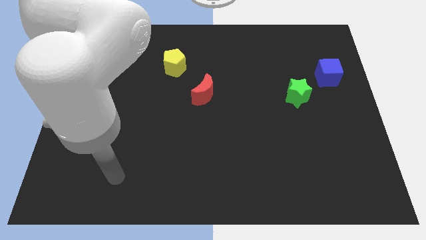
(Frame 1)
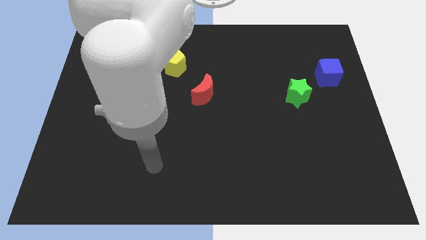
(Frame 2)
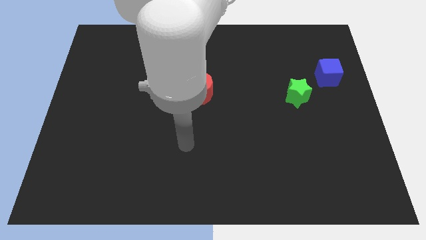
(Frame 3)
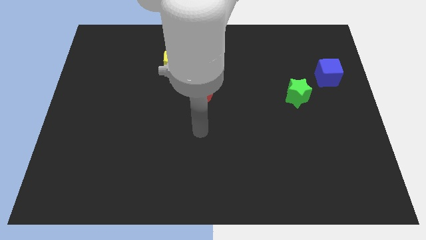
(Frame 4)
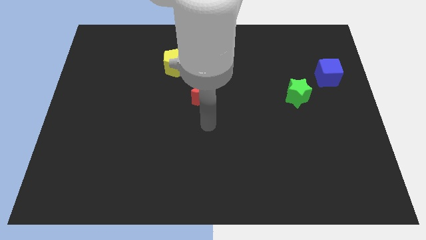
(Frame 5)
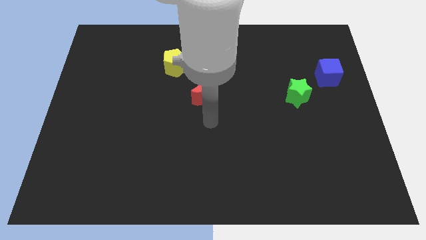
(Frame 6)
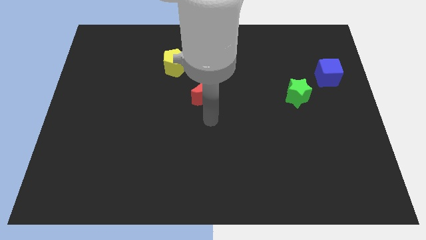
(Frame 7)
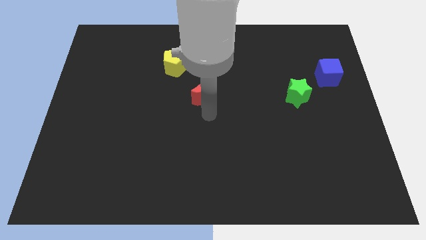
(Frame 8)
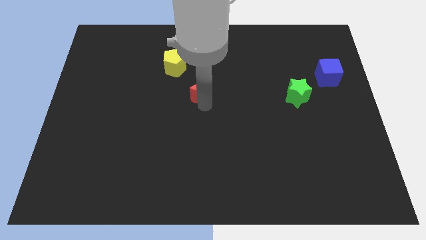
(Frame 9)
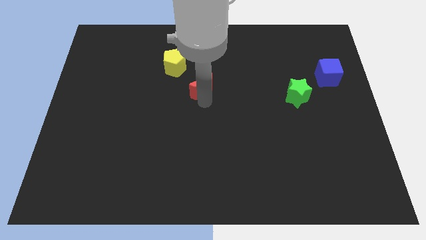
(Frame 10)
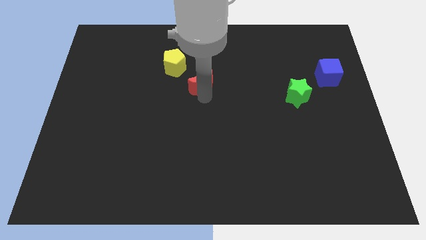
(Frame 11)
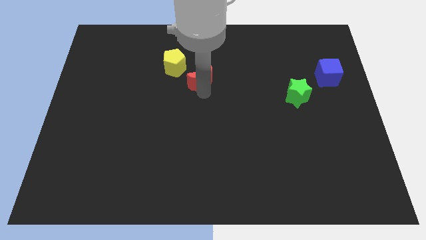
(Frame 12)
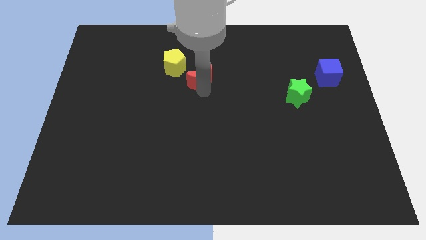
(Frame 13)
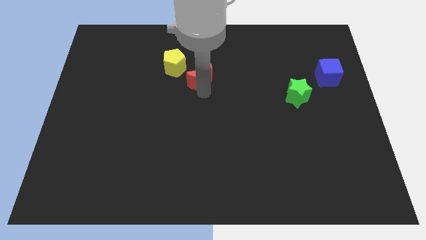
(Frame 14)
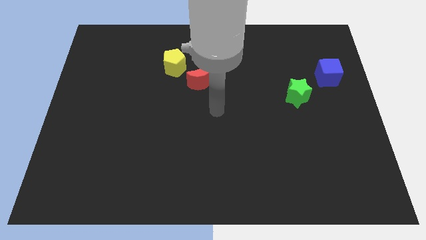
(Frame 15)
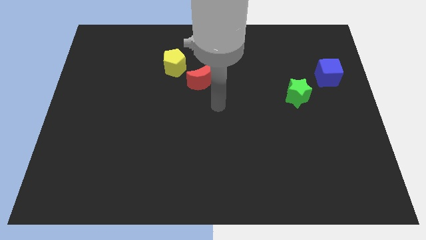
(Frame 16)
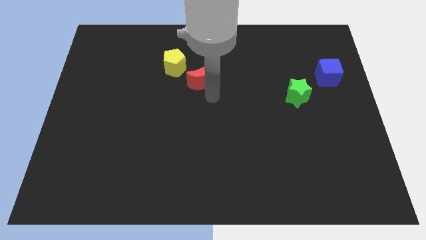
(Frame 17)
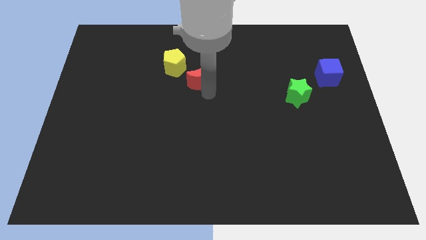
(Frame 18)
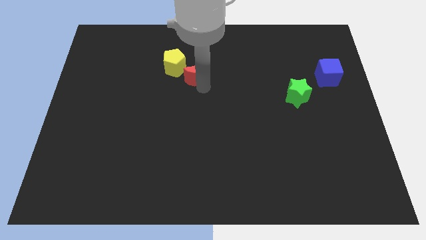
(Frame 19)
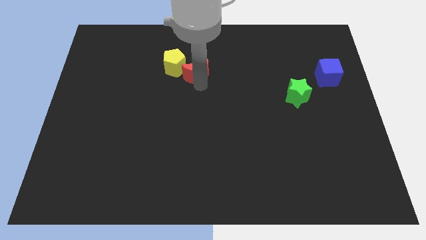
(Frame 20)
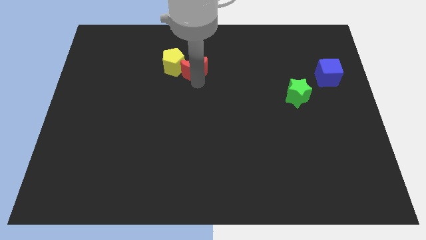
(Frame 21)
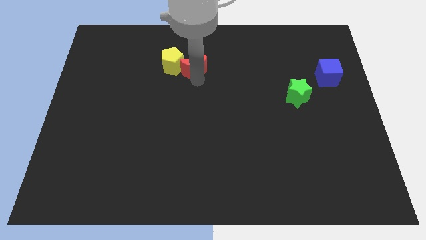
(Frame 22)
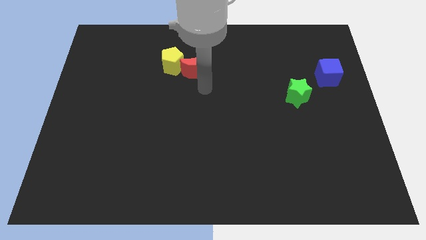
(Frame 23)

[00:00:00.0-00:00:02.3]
move the red moon next to the yellow pentagon

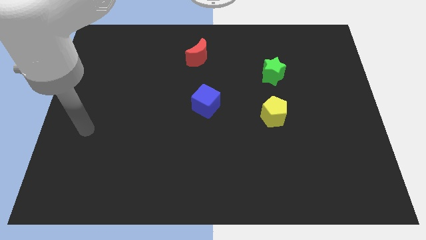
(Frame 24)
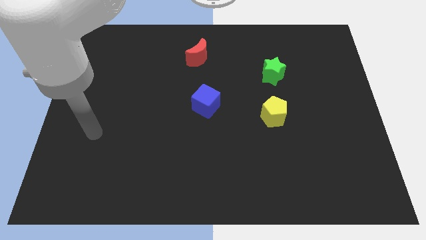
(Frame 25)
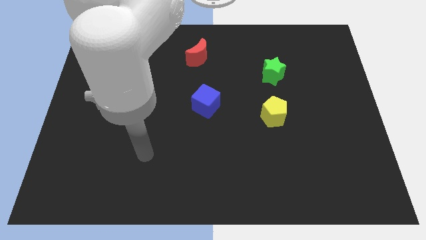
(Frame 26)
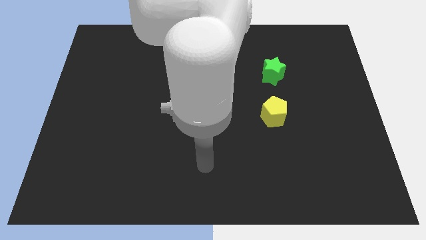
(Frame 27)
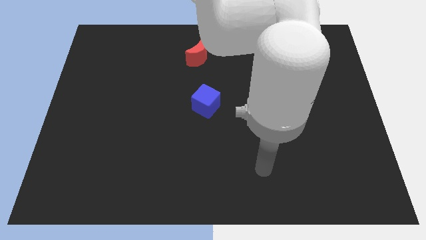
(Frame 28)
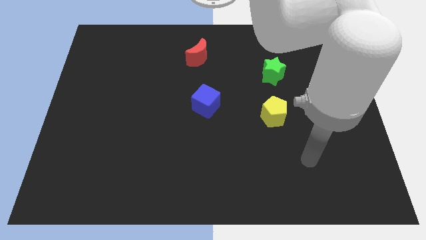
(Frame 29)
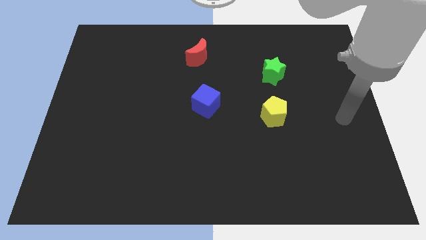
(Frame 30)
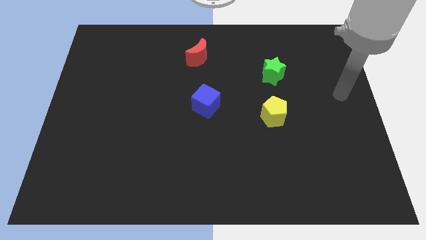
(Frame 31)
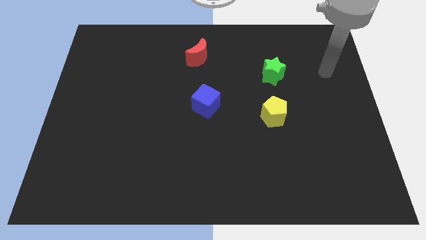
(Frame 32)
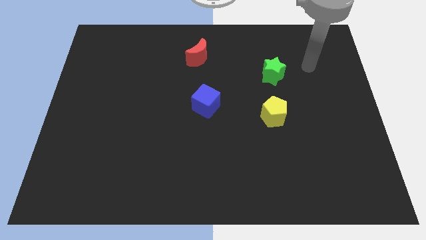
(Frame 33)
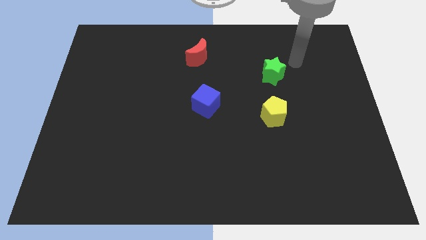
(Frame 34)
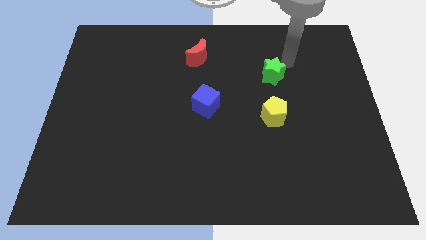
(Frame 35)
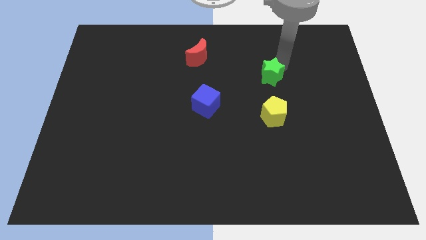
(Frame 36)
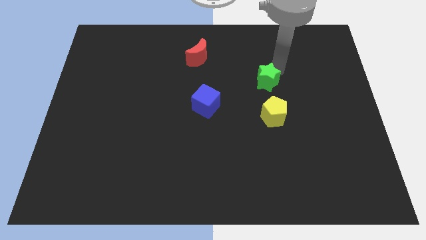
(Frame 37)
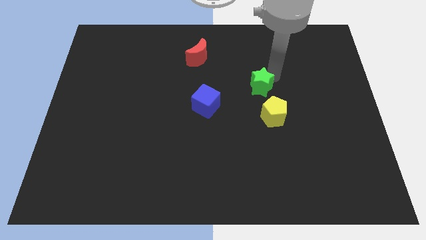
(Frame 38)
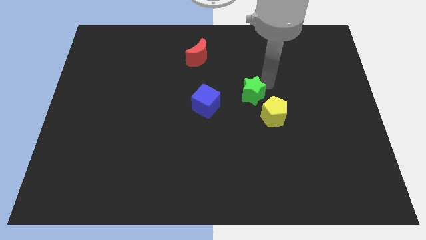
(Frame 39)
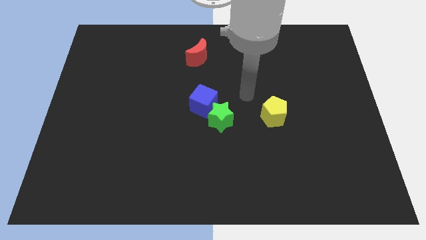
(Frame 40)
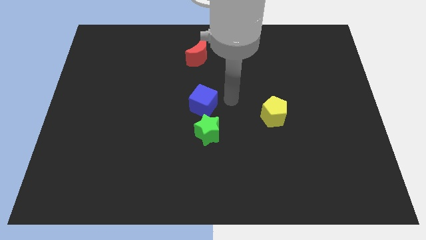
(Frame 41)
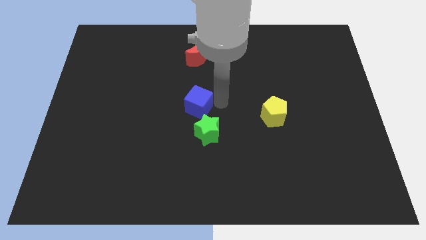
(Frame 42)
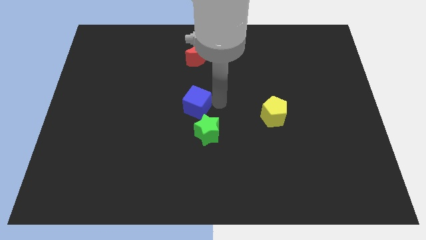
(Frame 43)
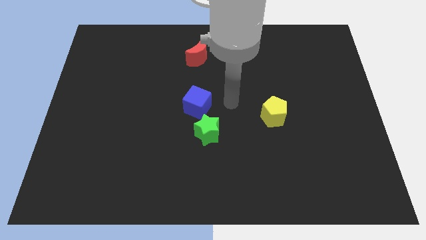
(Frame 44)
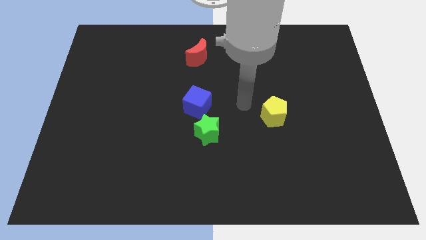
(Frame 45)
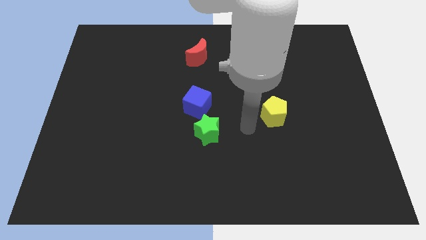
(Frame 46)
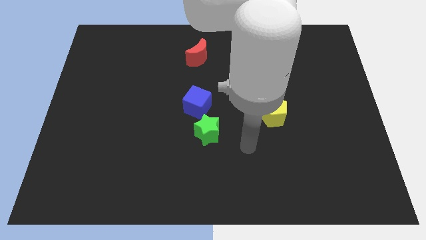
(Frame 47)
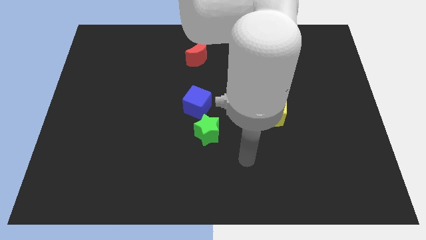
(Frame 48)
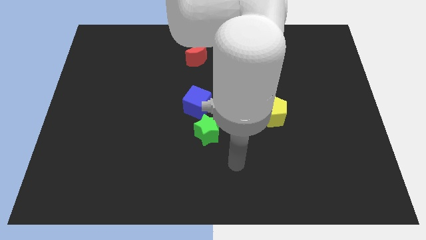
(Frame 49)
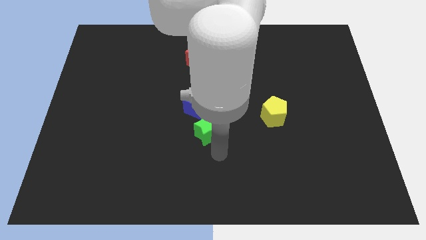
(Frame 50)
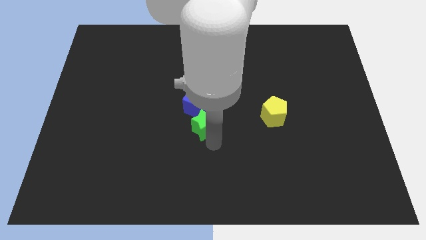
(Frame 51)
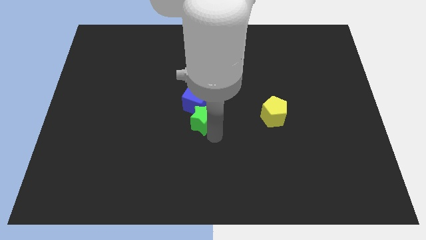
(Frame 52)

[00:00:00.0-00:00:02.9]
put the green block to the cube

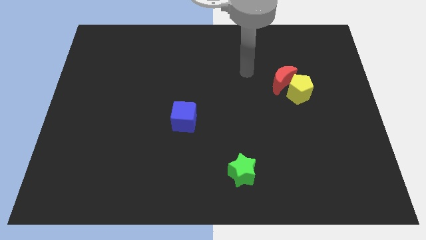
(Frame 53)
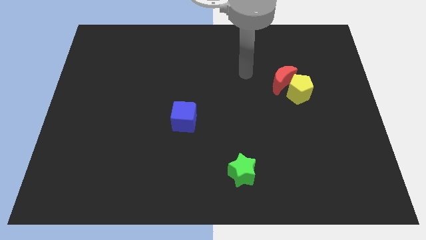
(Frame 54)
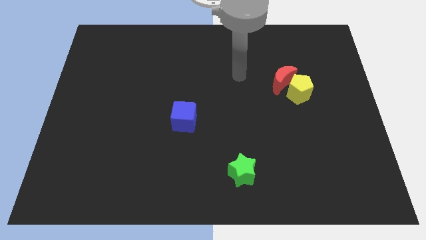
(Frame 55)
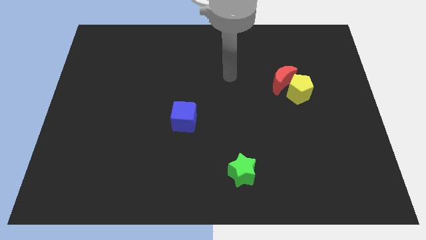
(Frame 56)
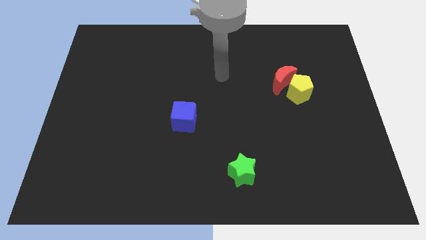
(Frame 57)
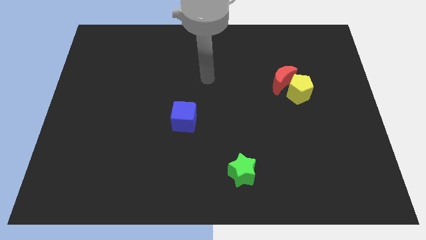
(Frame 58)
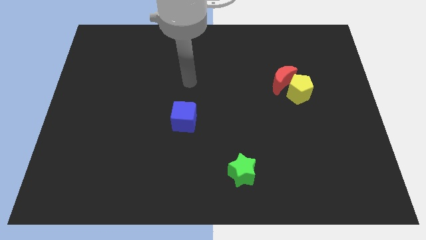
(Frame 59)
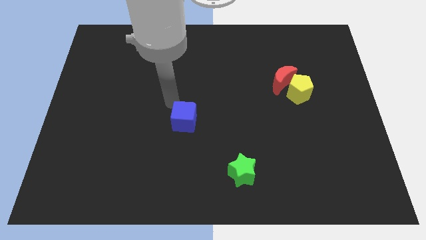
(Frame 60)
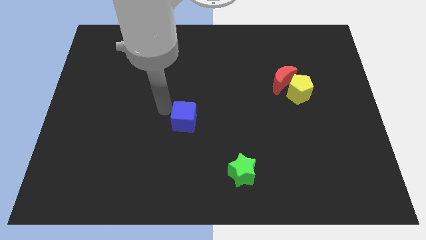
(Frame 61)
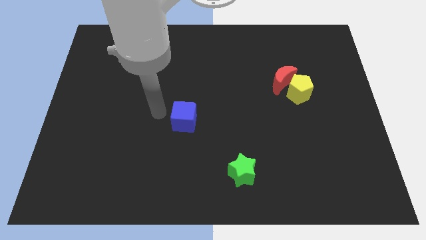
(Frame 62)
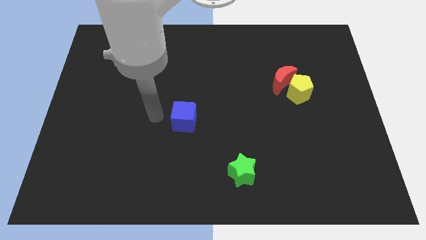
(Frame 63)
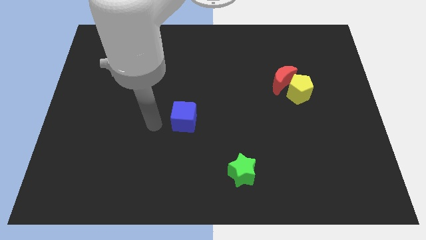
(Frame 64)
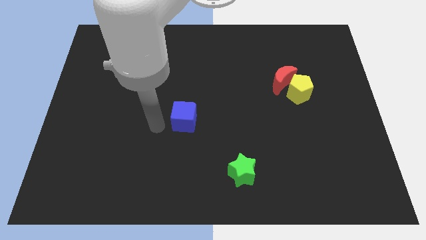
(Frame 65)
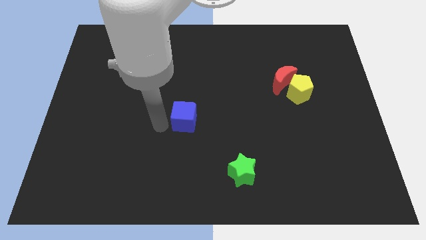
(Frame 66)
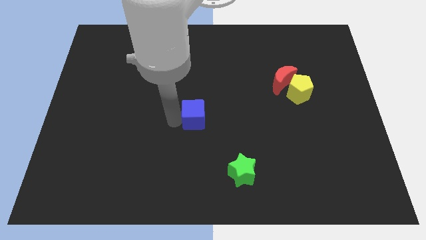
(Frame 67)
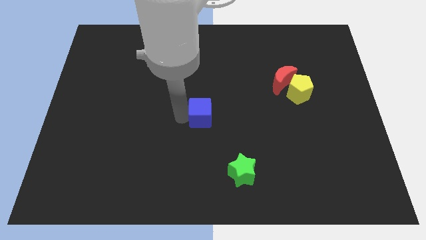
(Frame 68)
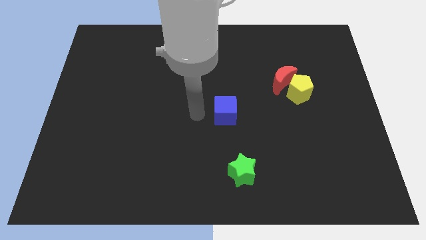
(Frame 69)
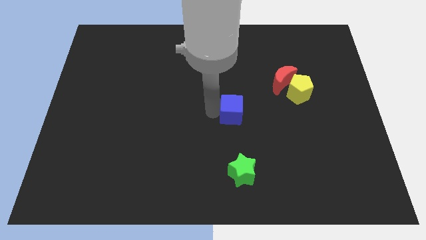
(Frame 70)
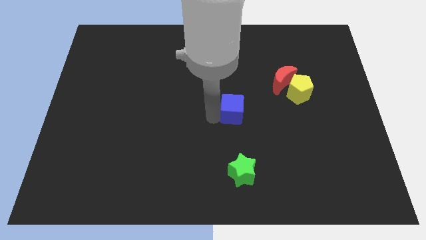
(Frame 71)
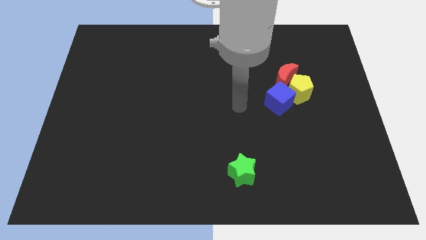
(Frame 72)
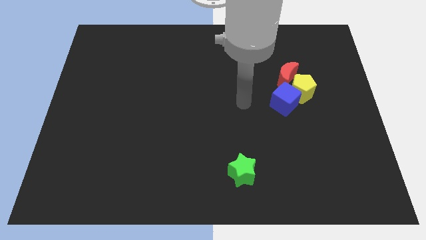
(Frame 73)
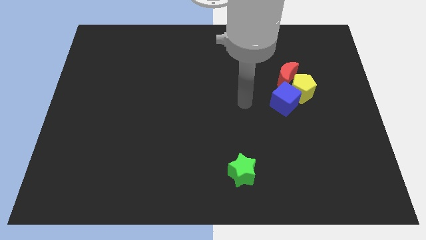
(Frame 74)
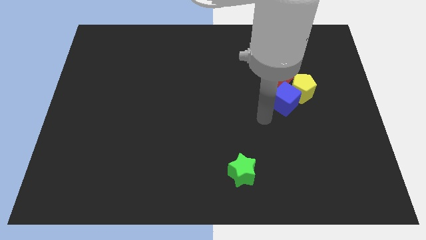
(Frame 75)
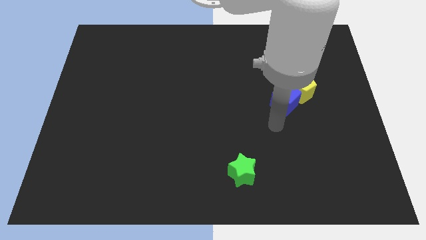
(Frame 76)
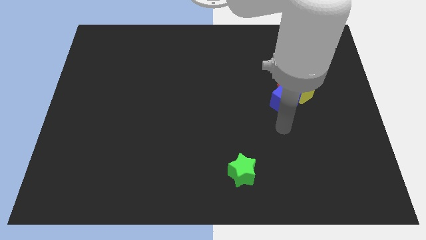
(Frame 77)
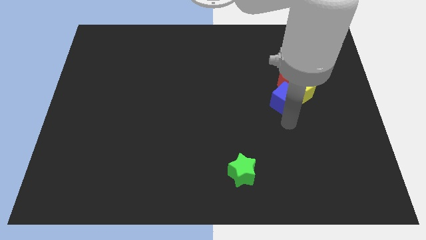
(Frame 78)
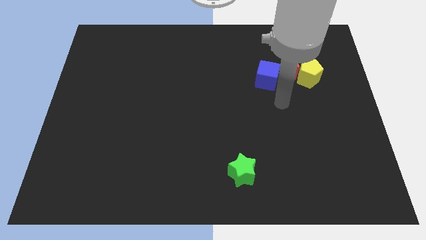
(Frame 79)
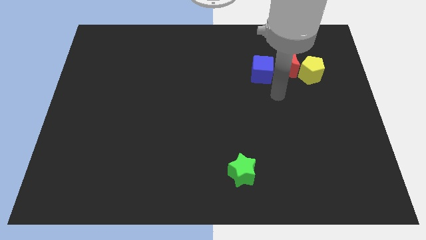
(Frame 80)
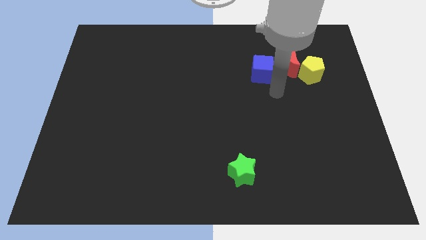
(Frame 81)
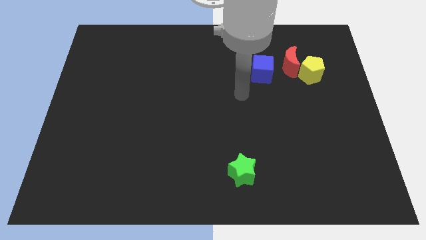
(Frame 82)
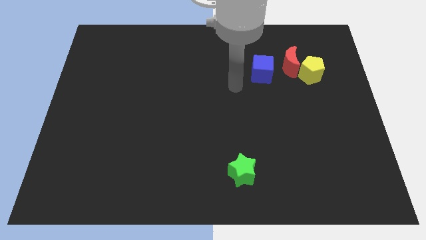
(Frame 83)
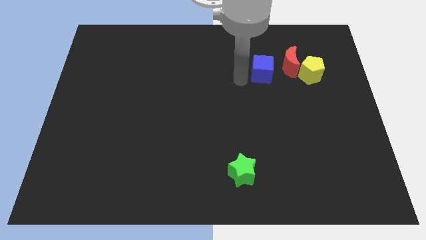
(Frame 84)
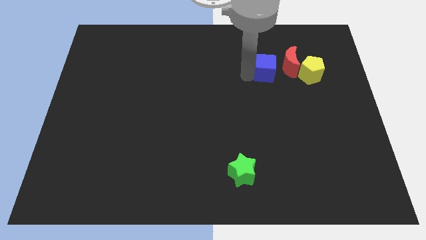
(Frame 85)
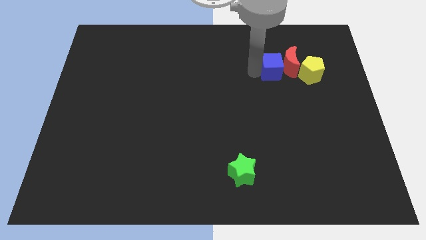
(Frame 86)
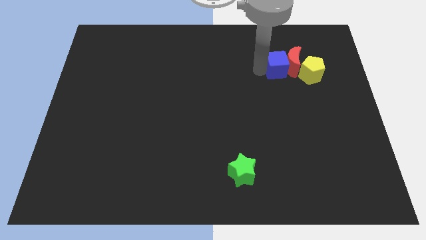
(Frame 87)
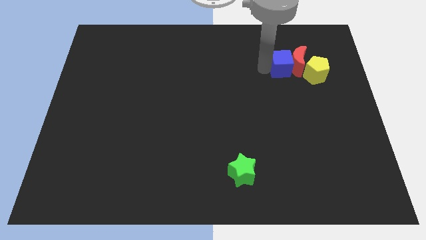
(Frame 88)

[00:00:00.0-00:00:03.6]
push the cube to the moon
